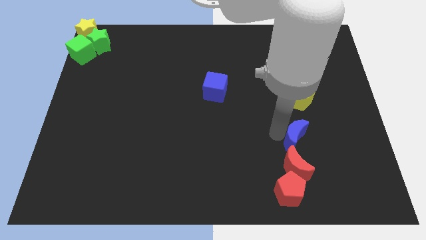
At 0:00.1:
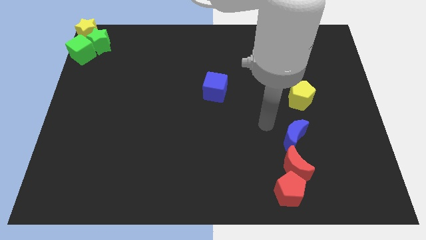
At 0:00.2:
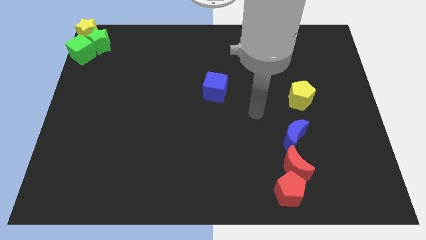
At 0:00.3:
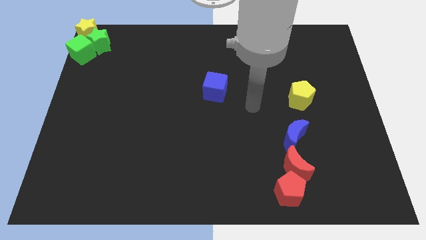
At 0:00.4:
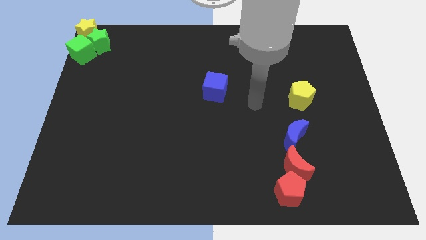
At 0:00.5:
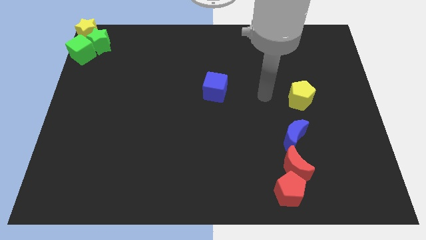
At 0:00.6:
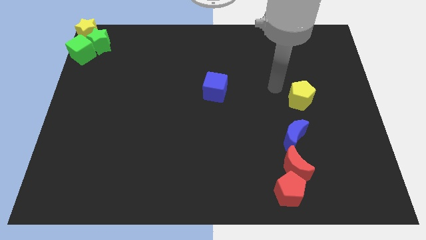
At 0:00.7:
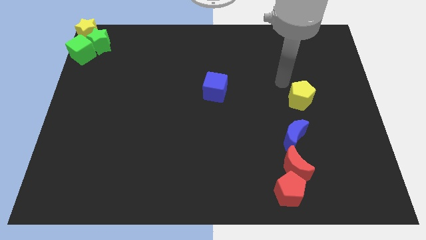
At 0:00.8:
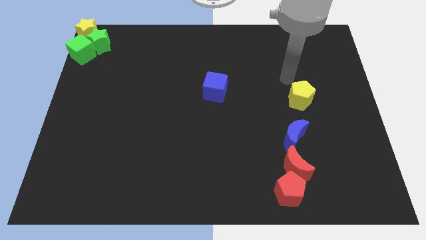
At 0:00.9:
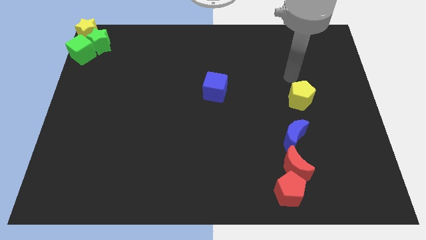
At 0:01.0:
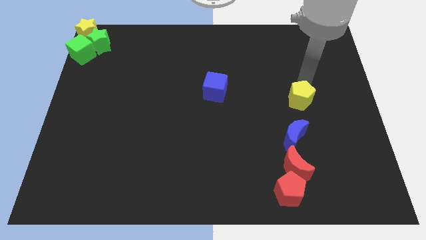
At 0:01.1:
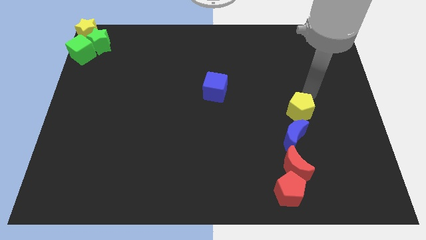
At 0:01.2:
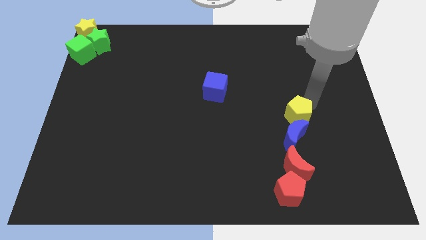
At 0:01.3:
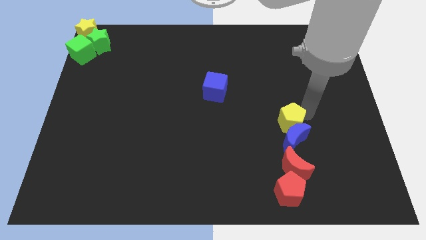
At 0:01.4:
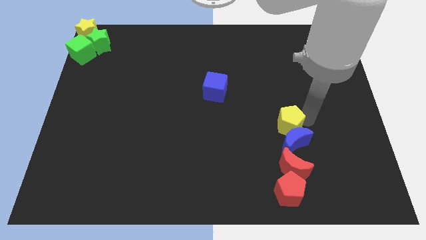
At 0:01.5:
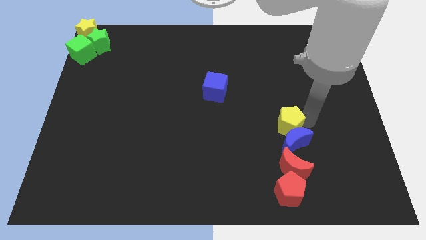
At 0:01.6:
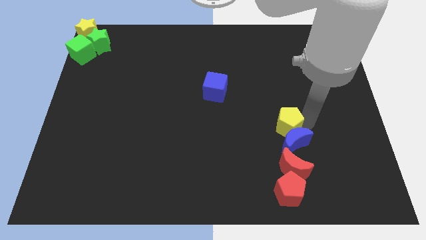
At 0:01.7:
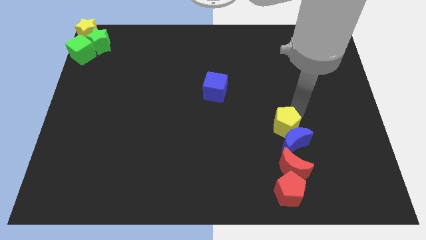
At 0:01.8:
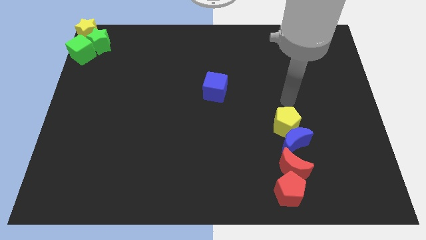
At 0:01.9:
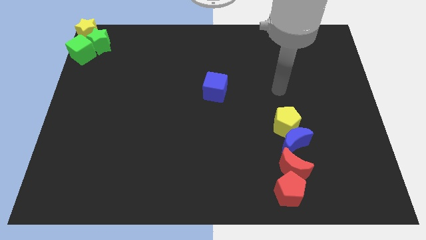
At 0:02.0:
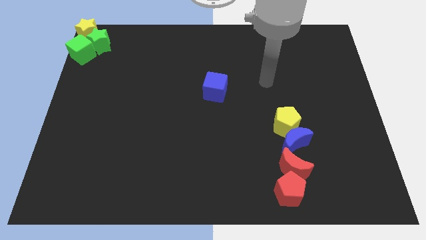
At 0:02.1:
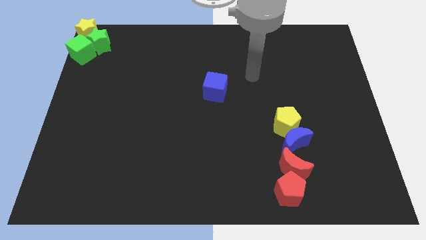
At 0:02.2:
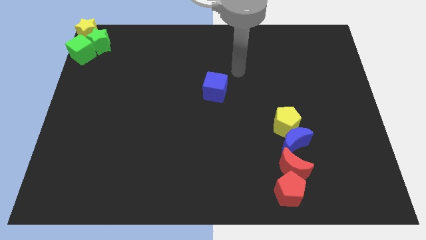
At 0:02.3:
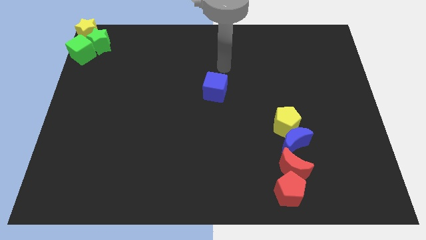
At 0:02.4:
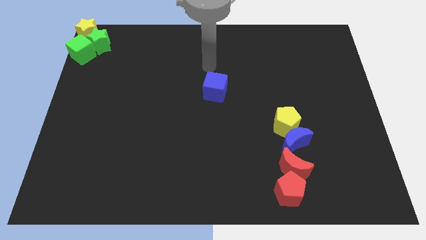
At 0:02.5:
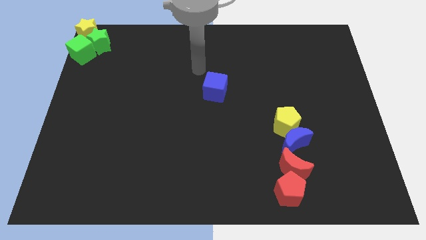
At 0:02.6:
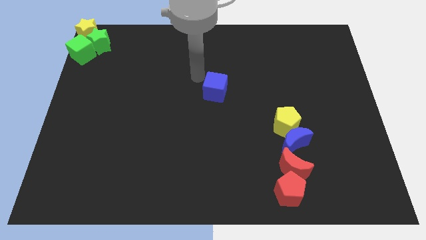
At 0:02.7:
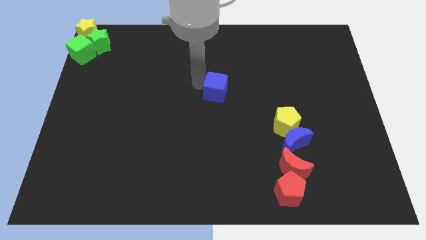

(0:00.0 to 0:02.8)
push the yellow pentagon into the grup of blocks

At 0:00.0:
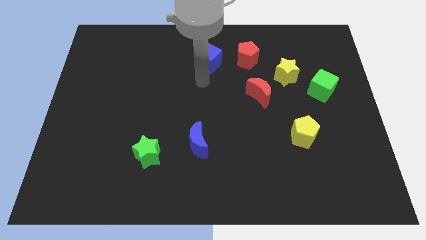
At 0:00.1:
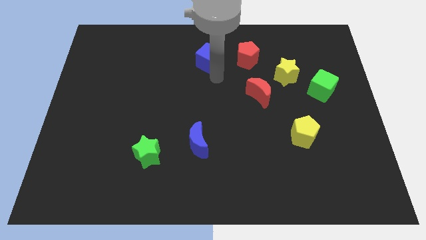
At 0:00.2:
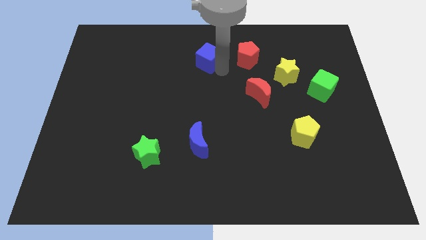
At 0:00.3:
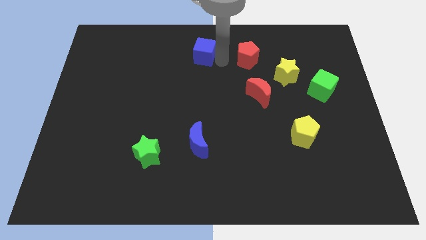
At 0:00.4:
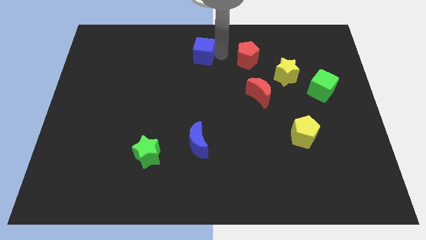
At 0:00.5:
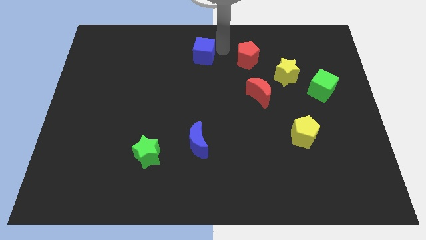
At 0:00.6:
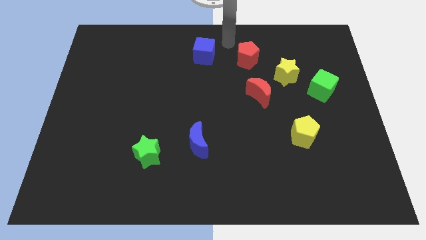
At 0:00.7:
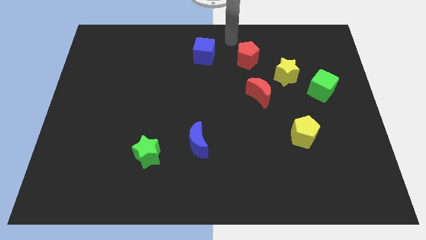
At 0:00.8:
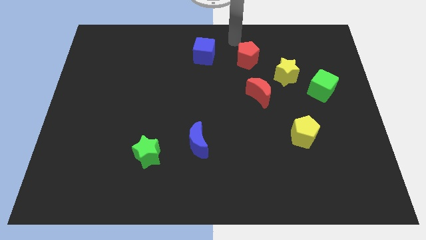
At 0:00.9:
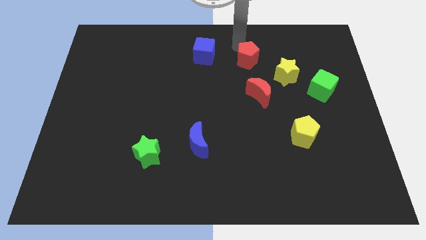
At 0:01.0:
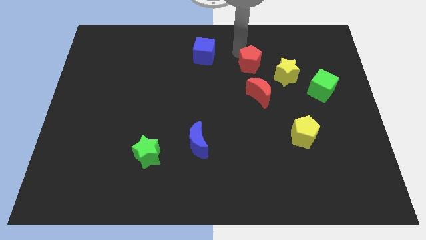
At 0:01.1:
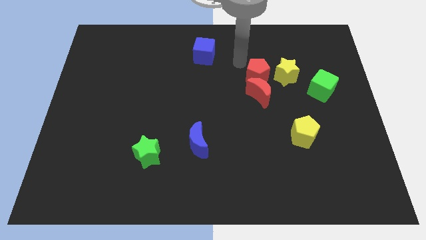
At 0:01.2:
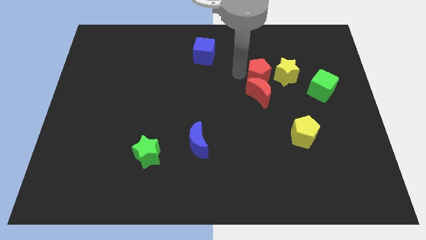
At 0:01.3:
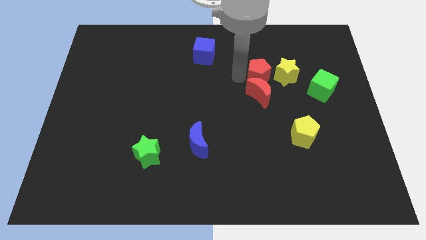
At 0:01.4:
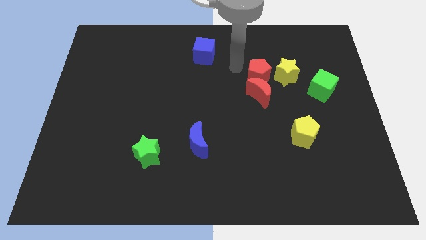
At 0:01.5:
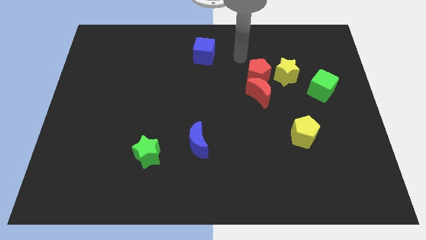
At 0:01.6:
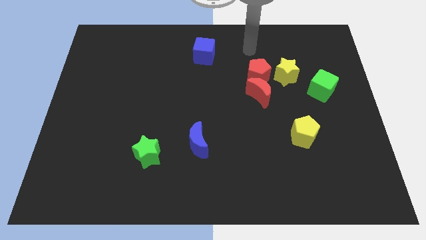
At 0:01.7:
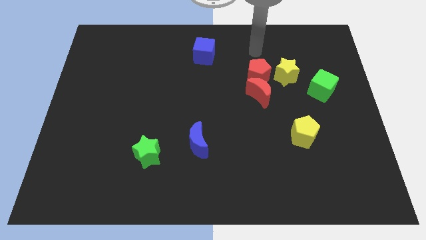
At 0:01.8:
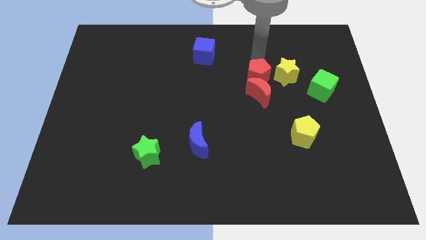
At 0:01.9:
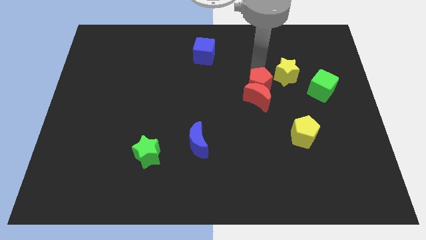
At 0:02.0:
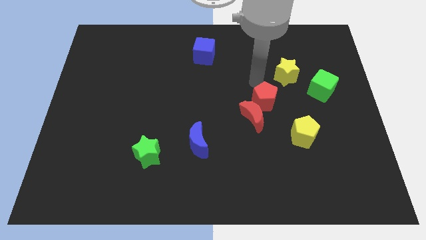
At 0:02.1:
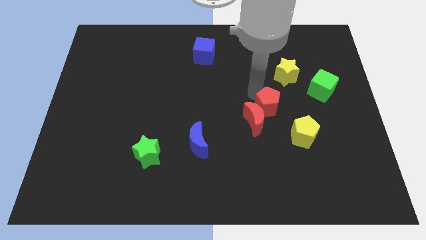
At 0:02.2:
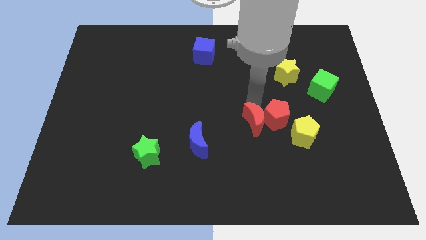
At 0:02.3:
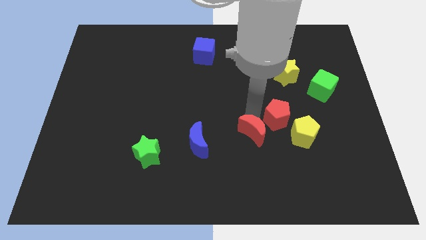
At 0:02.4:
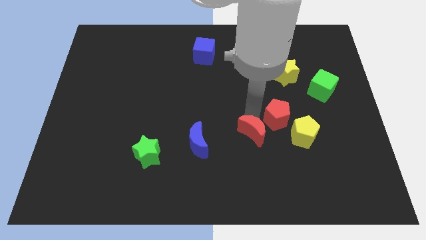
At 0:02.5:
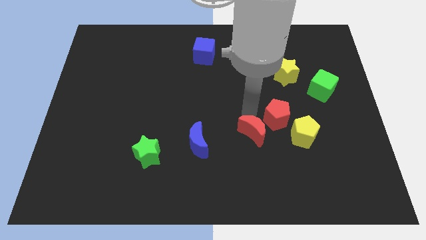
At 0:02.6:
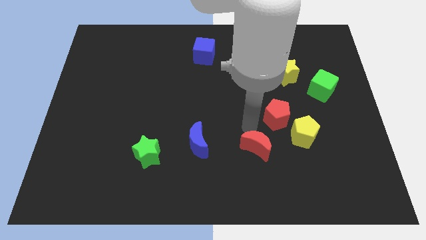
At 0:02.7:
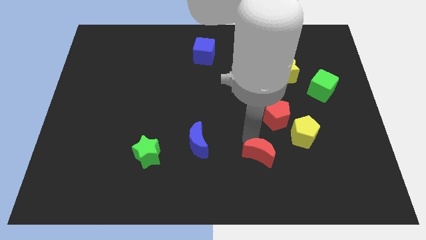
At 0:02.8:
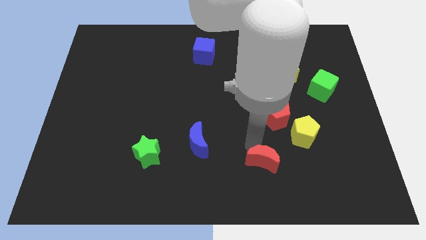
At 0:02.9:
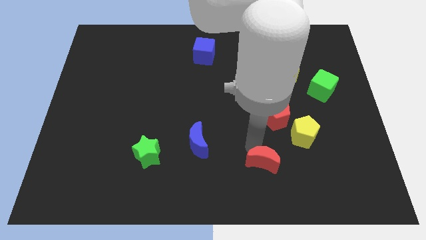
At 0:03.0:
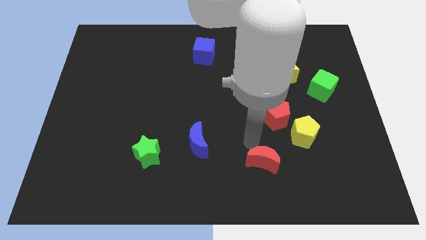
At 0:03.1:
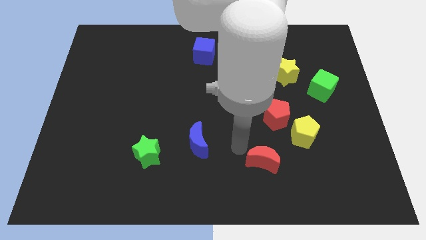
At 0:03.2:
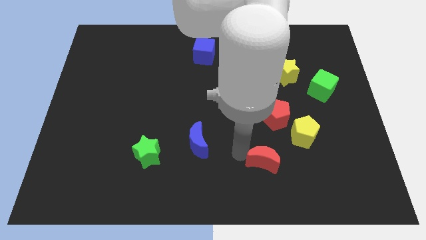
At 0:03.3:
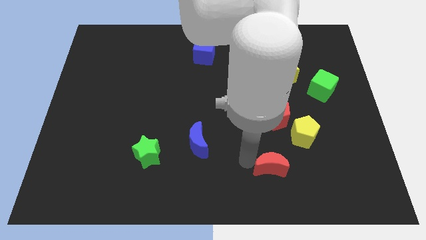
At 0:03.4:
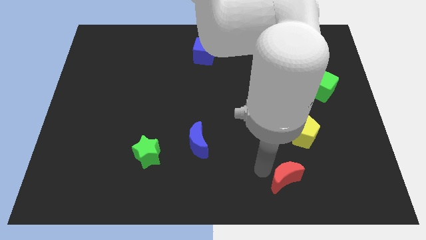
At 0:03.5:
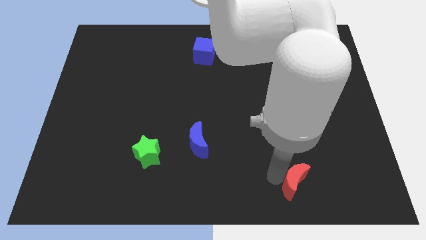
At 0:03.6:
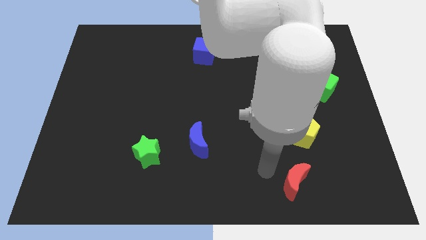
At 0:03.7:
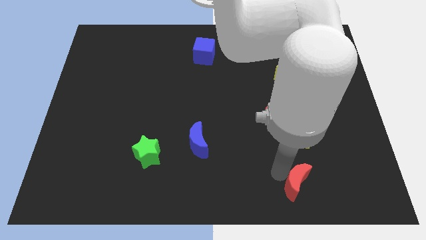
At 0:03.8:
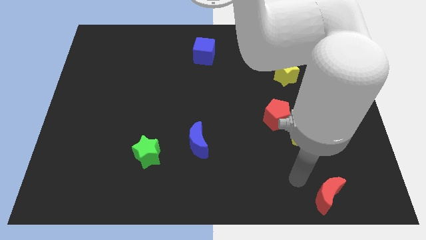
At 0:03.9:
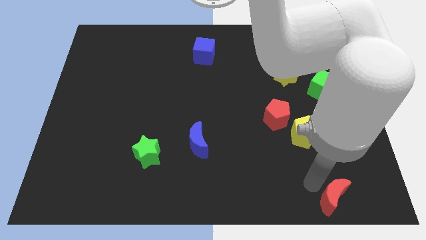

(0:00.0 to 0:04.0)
push the red crescent to the bottom right of the board

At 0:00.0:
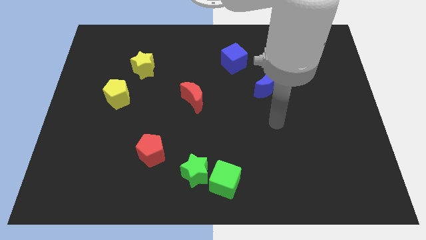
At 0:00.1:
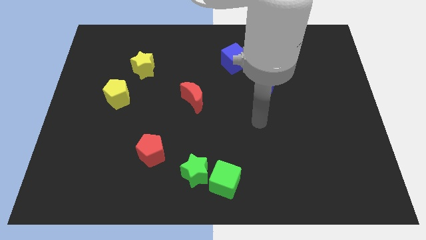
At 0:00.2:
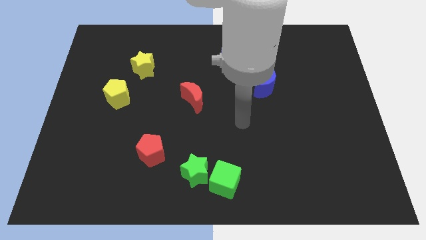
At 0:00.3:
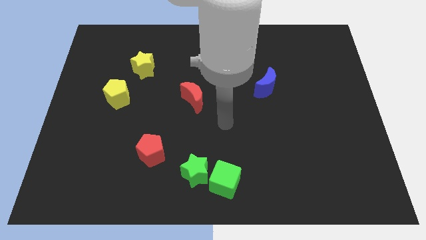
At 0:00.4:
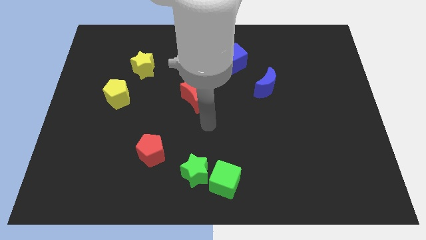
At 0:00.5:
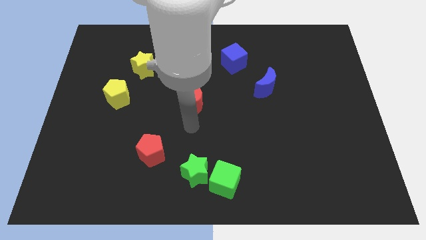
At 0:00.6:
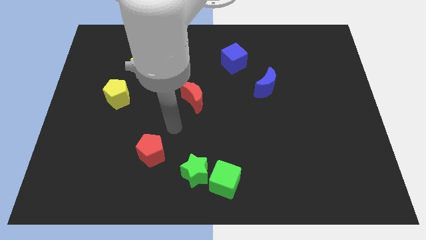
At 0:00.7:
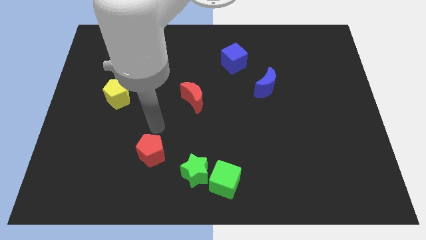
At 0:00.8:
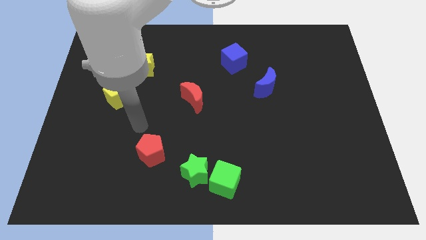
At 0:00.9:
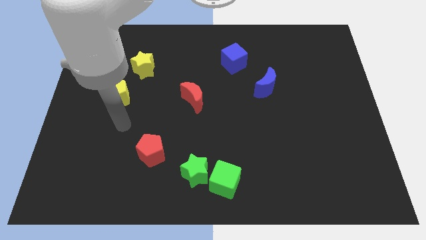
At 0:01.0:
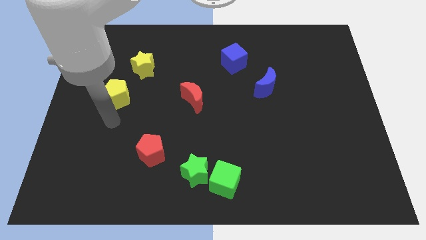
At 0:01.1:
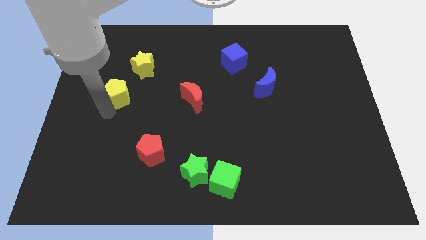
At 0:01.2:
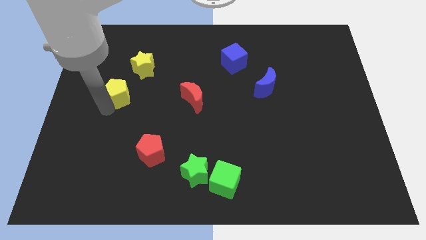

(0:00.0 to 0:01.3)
move your arm to the bottom of the yellow pentagon

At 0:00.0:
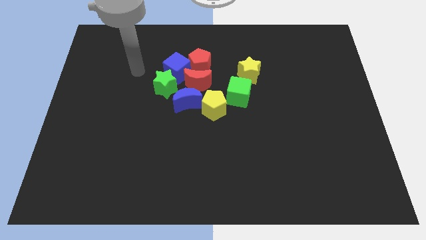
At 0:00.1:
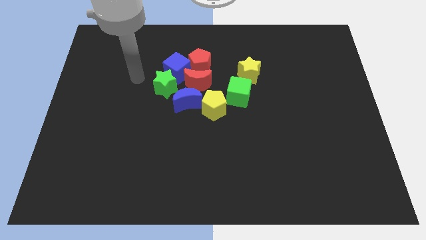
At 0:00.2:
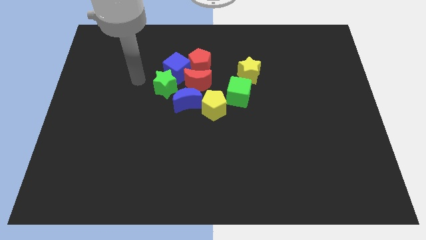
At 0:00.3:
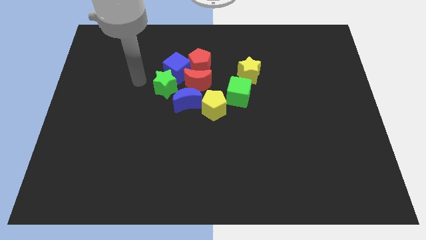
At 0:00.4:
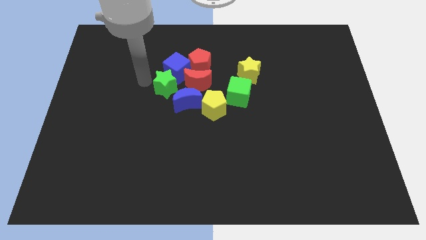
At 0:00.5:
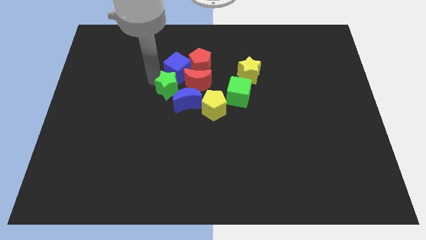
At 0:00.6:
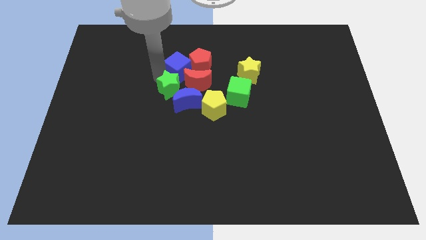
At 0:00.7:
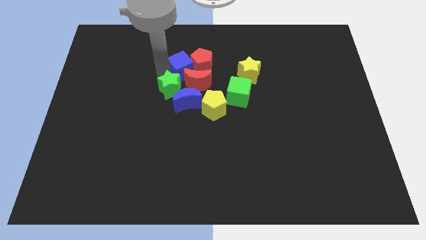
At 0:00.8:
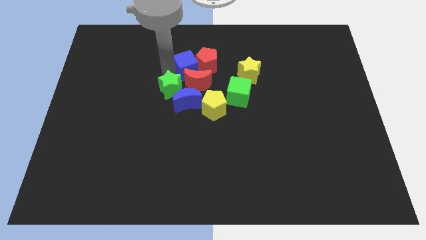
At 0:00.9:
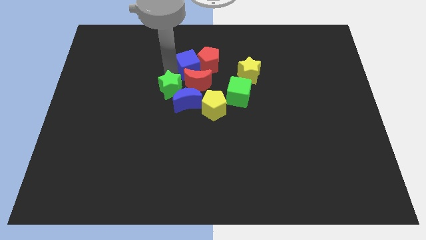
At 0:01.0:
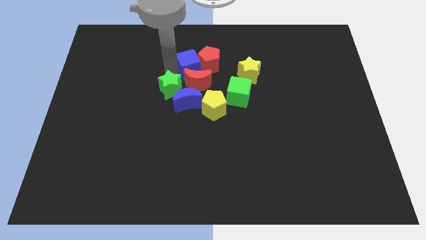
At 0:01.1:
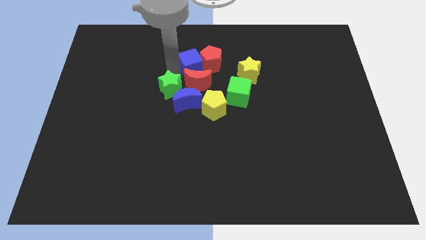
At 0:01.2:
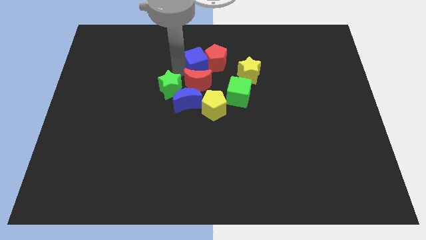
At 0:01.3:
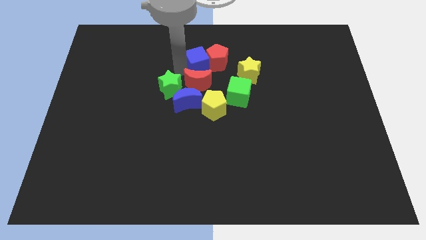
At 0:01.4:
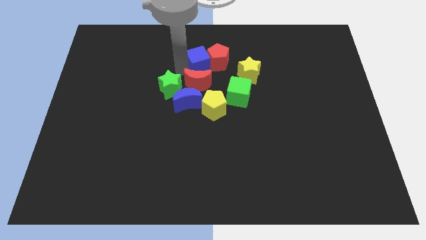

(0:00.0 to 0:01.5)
move the red pentagon and blue cube to the center
